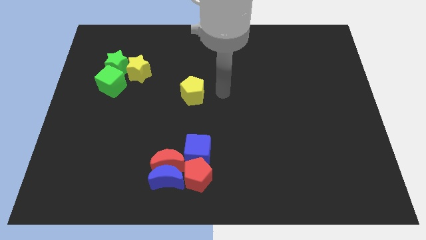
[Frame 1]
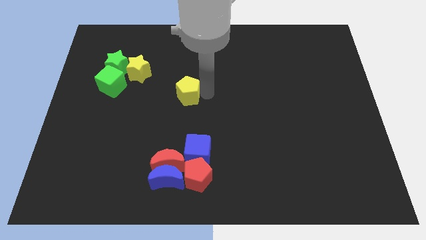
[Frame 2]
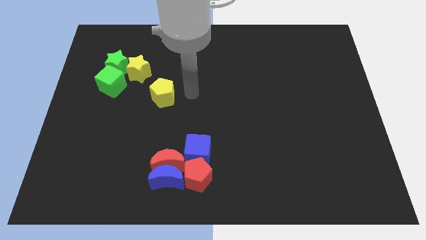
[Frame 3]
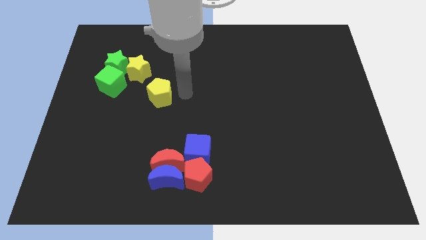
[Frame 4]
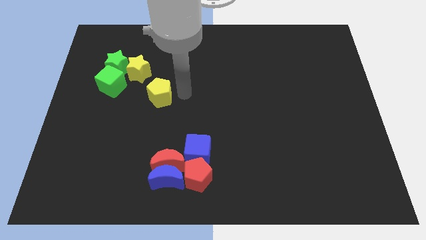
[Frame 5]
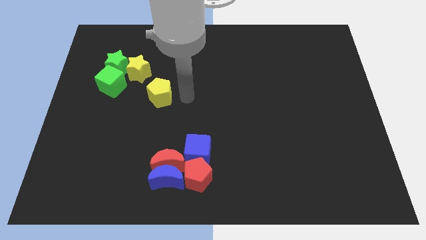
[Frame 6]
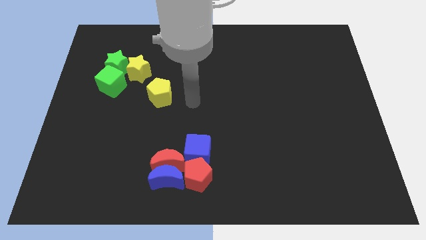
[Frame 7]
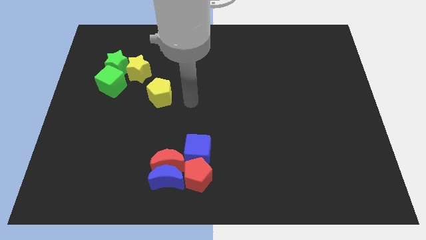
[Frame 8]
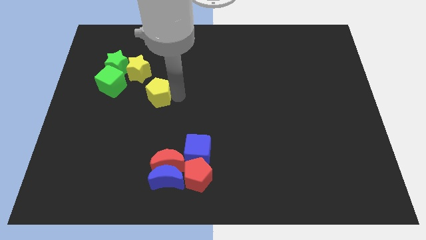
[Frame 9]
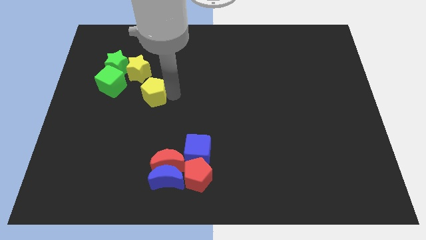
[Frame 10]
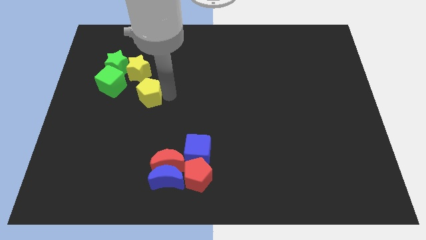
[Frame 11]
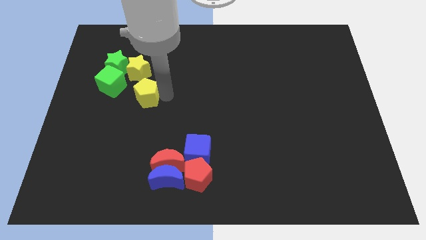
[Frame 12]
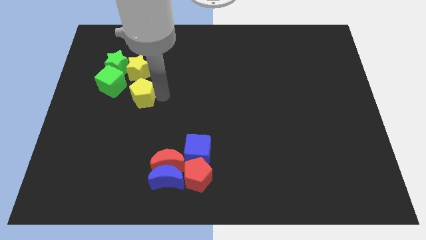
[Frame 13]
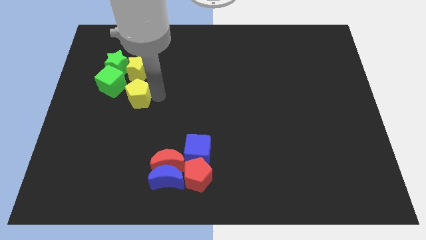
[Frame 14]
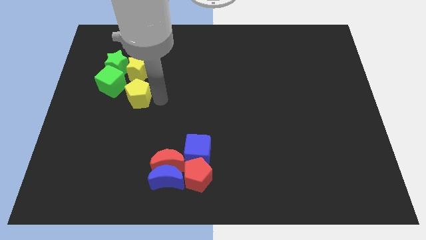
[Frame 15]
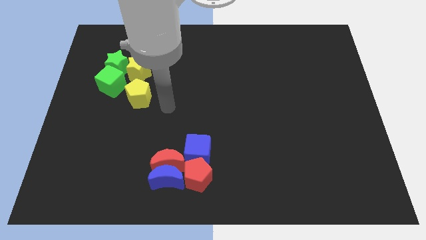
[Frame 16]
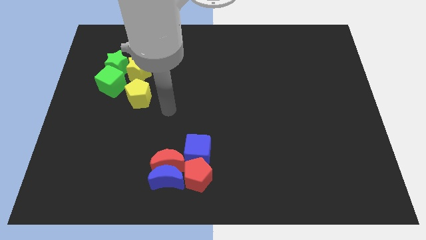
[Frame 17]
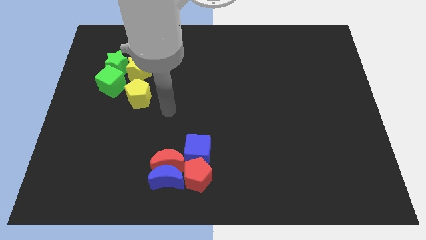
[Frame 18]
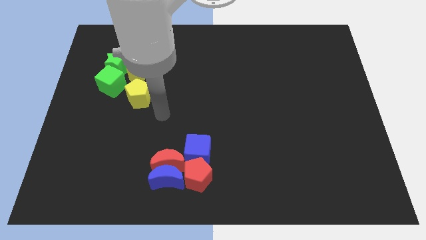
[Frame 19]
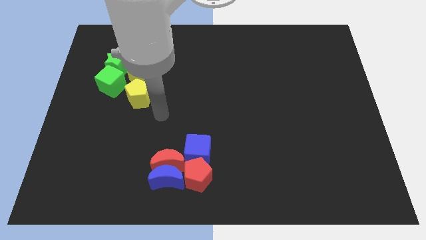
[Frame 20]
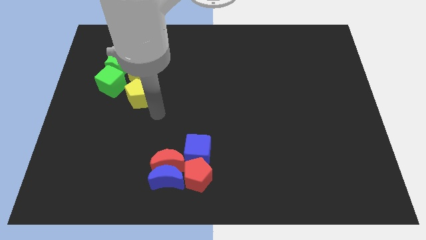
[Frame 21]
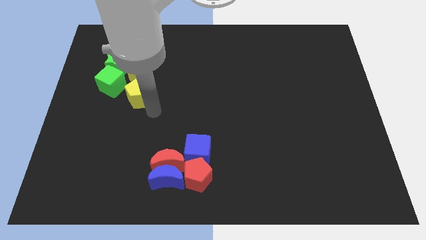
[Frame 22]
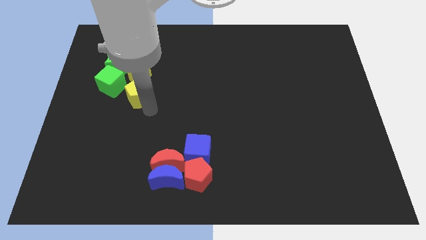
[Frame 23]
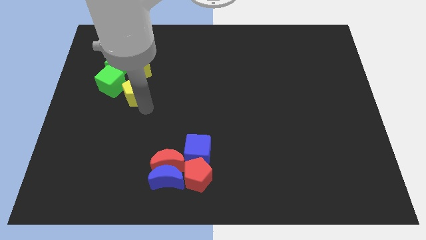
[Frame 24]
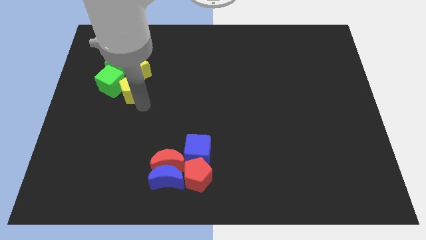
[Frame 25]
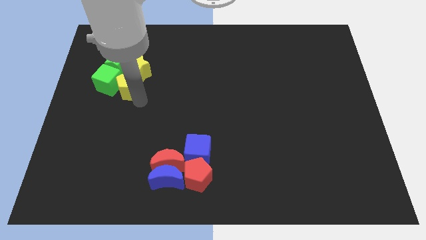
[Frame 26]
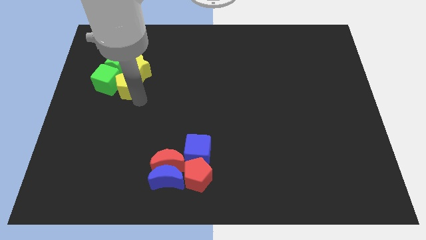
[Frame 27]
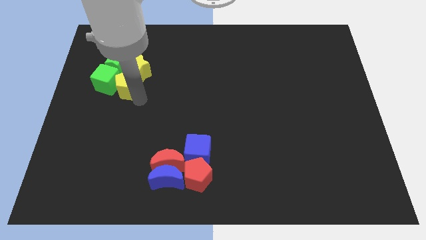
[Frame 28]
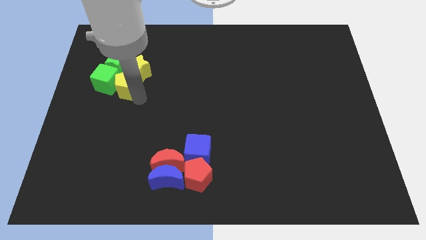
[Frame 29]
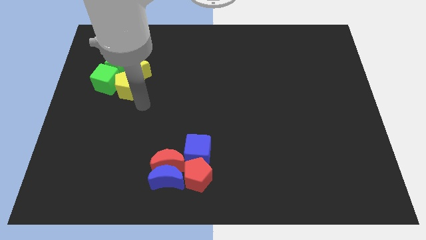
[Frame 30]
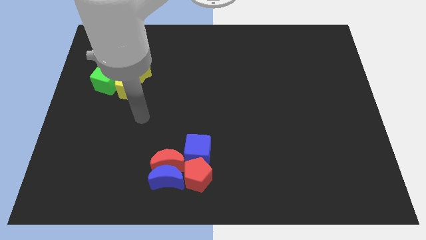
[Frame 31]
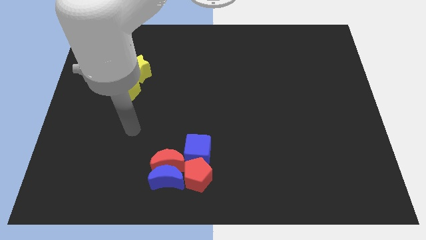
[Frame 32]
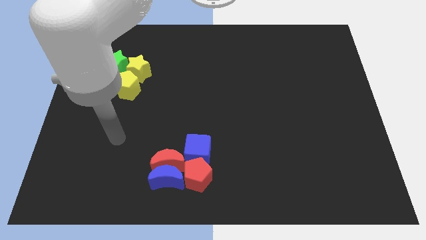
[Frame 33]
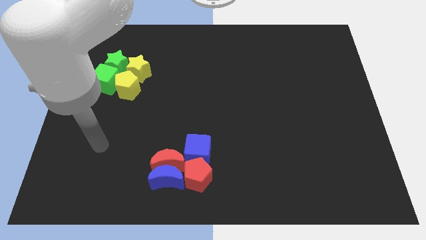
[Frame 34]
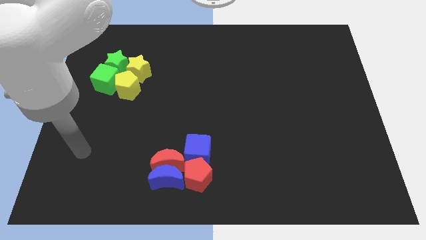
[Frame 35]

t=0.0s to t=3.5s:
place the yellow pentagon down to the yellow star

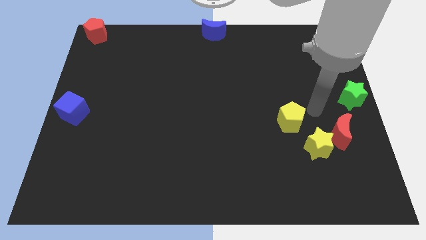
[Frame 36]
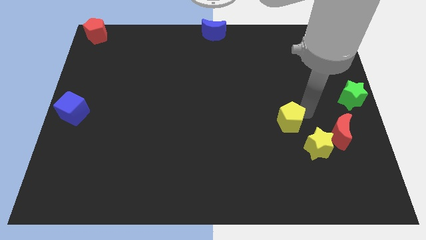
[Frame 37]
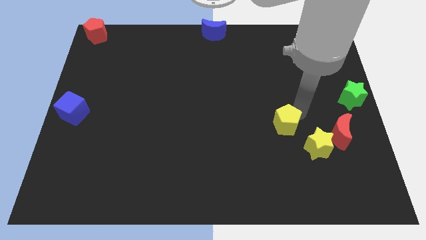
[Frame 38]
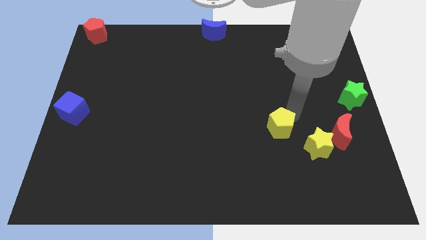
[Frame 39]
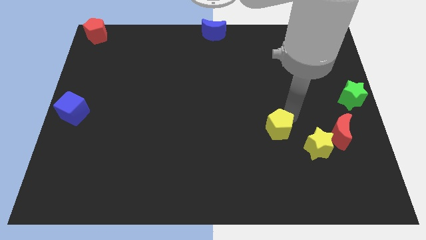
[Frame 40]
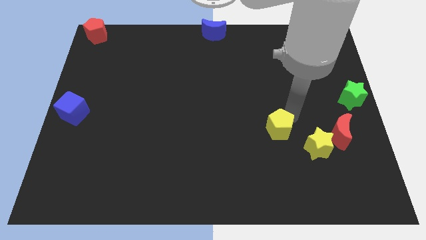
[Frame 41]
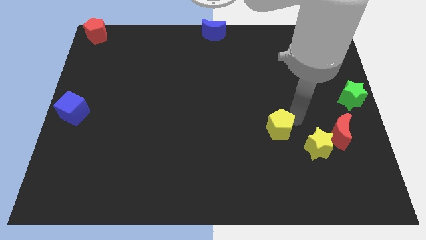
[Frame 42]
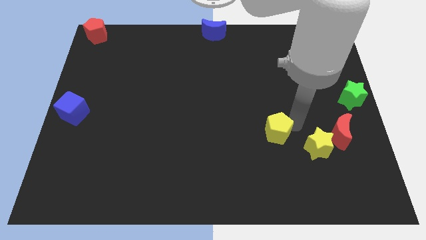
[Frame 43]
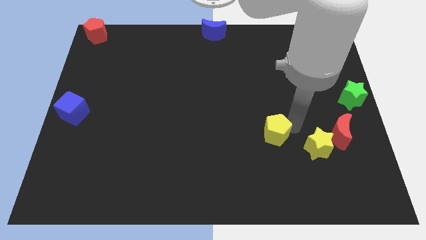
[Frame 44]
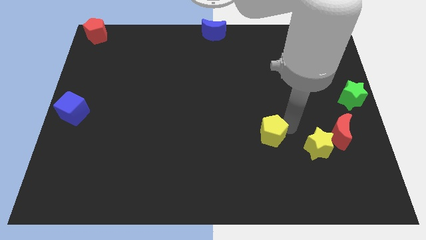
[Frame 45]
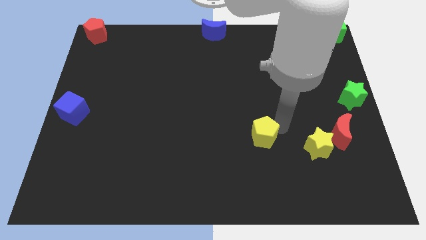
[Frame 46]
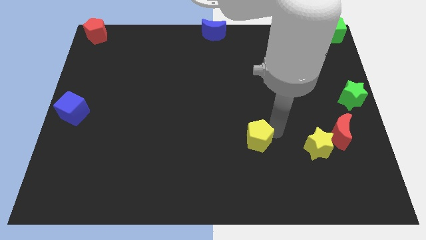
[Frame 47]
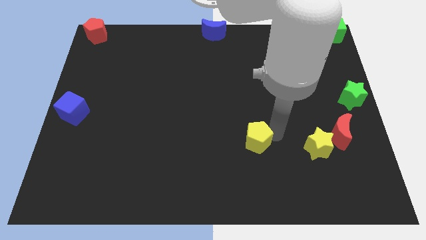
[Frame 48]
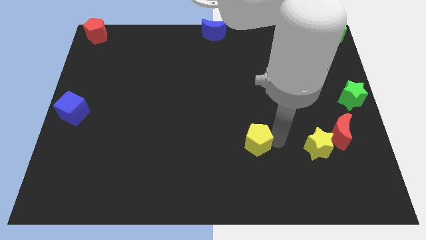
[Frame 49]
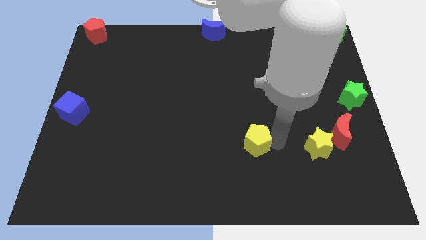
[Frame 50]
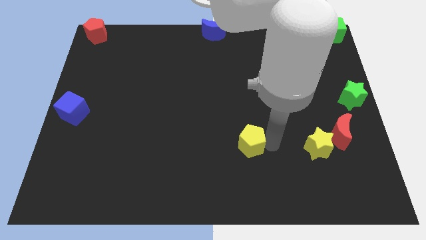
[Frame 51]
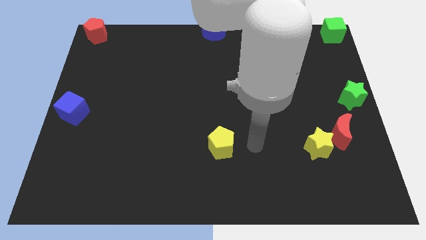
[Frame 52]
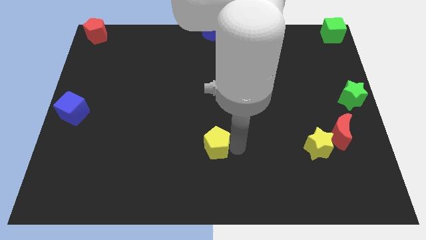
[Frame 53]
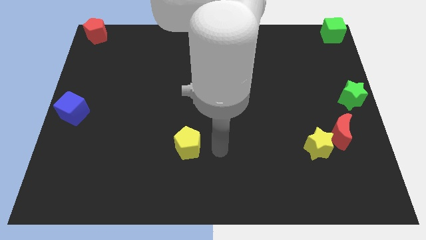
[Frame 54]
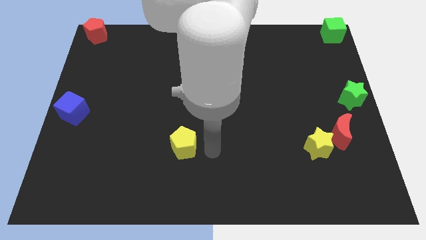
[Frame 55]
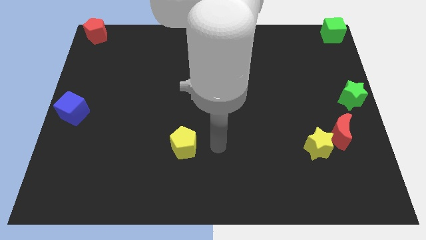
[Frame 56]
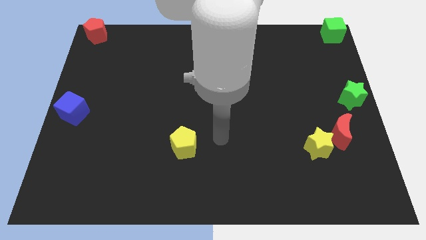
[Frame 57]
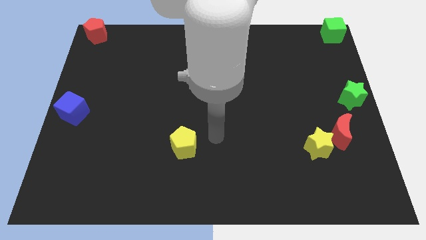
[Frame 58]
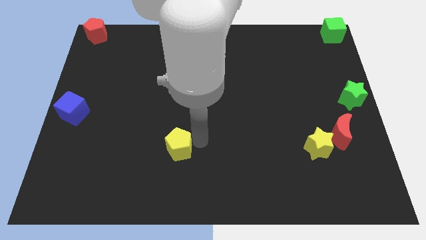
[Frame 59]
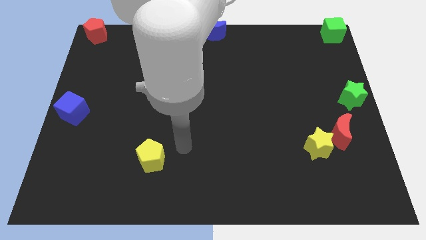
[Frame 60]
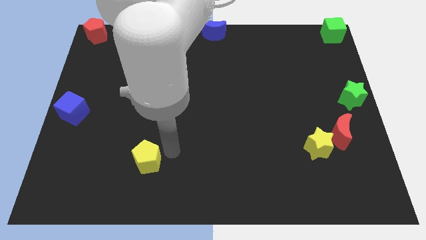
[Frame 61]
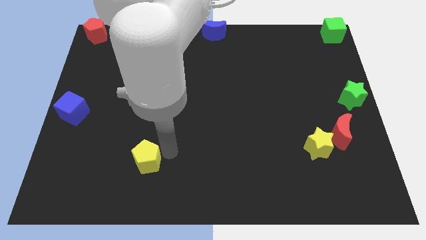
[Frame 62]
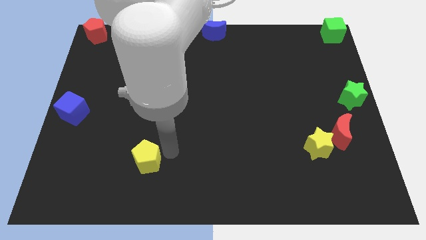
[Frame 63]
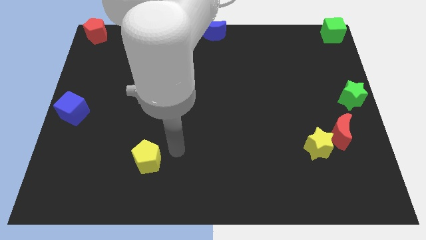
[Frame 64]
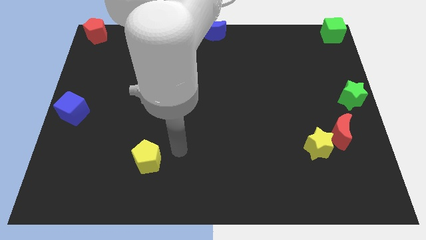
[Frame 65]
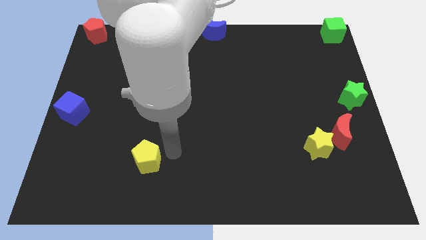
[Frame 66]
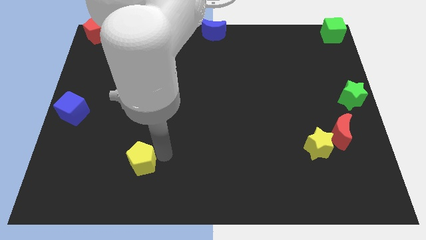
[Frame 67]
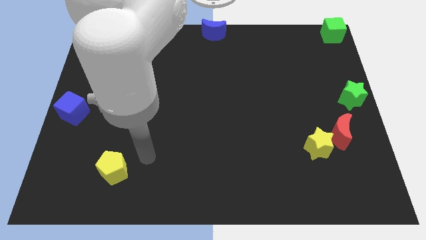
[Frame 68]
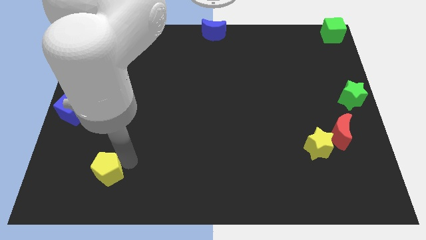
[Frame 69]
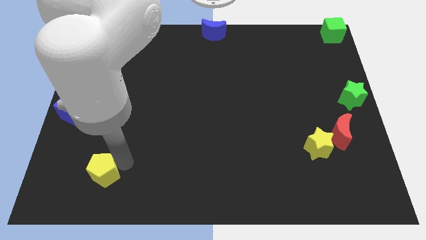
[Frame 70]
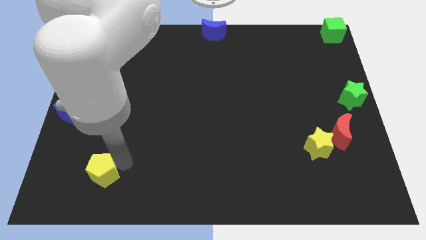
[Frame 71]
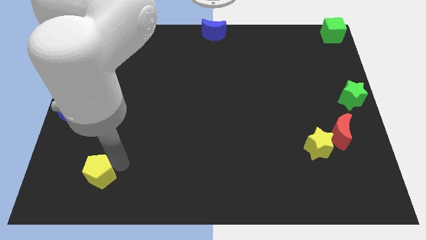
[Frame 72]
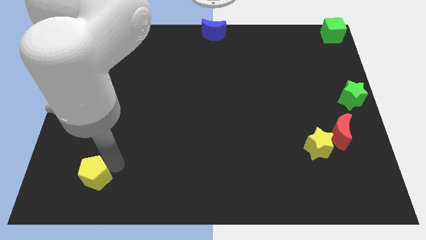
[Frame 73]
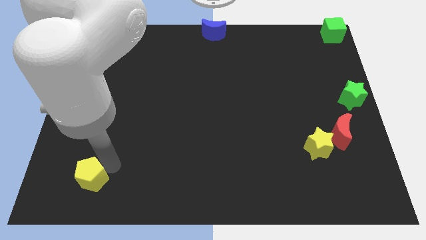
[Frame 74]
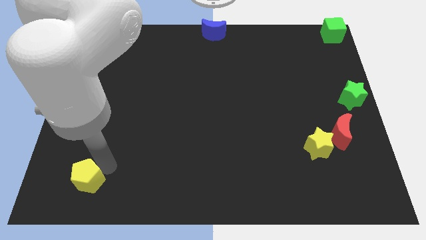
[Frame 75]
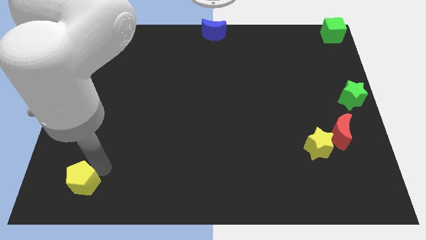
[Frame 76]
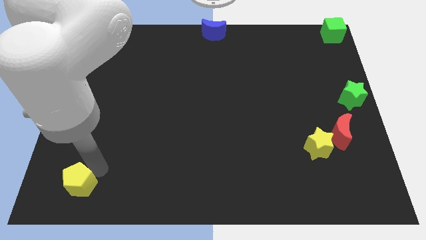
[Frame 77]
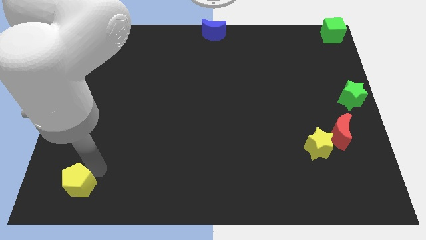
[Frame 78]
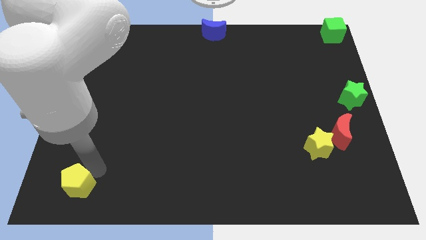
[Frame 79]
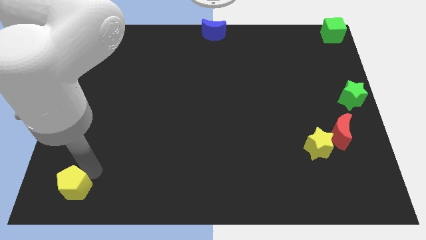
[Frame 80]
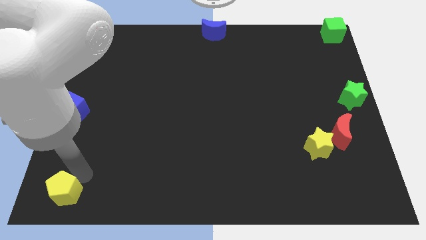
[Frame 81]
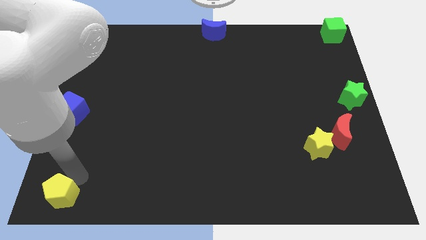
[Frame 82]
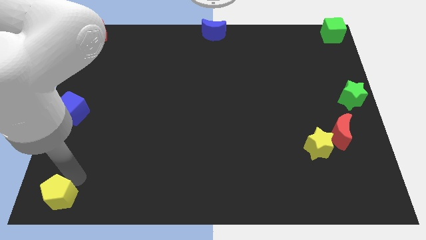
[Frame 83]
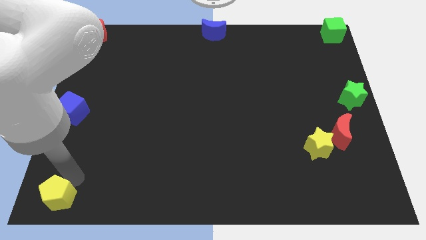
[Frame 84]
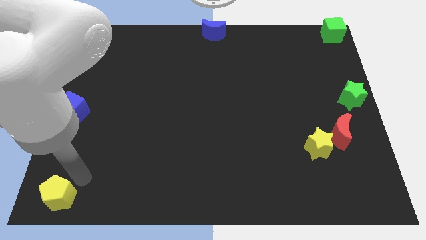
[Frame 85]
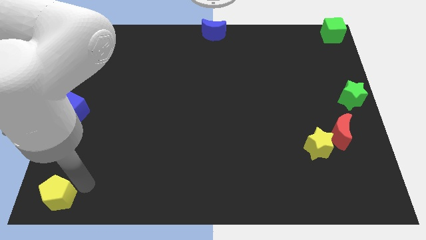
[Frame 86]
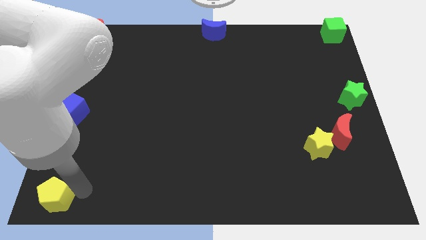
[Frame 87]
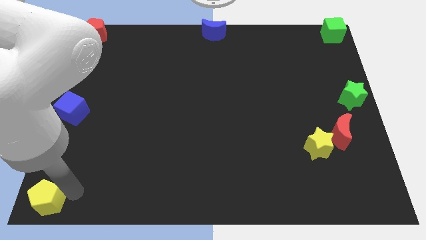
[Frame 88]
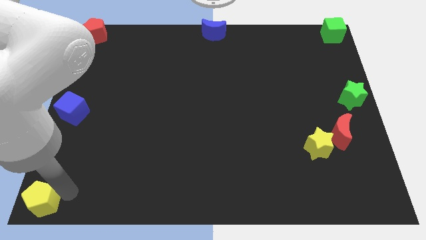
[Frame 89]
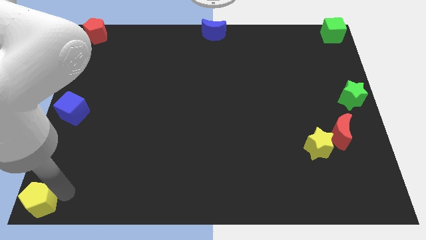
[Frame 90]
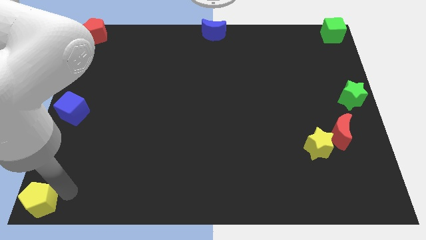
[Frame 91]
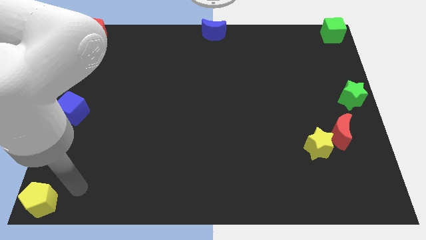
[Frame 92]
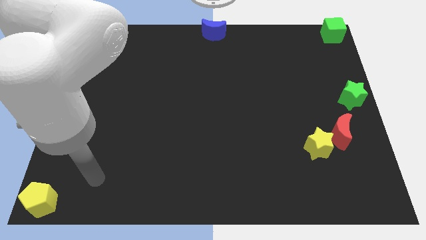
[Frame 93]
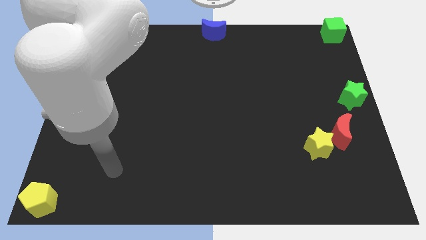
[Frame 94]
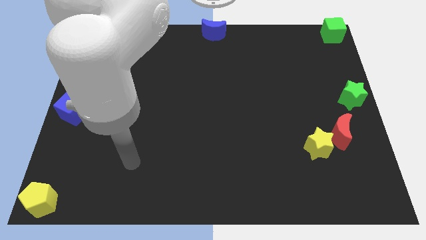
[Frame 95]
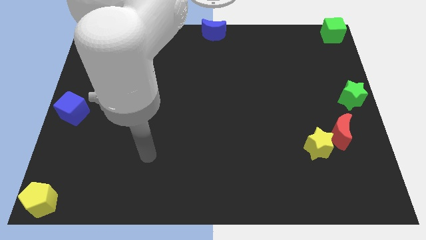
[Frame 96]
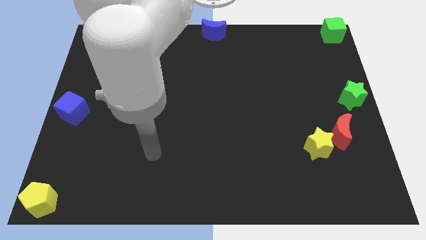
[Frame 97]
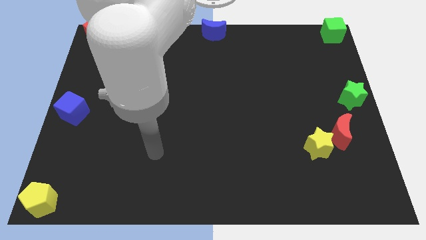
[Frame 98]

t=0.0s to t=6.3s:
move the yellow pentagon to the bottom left corner of the board
